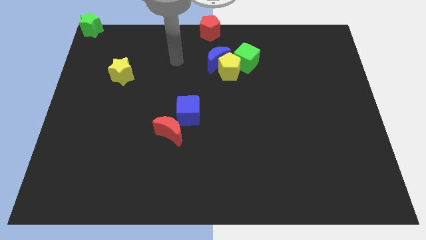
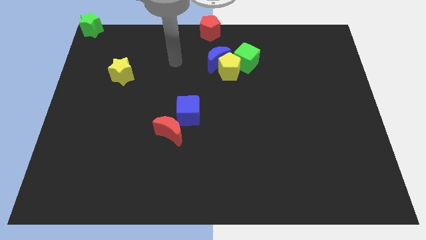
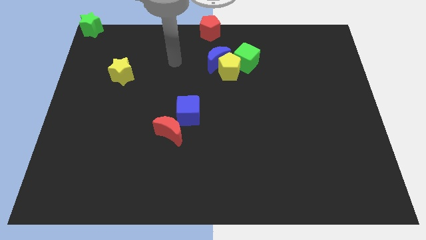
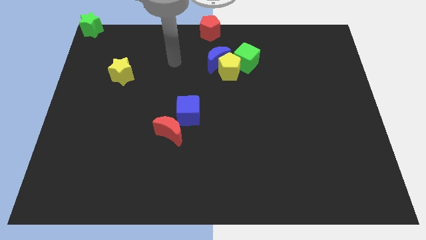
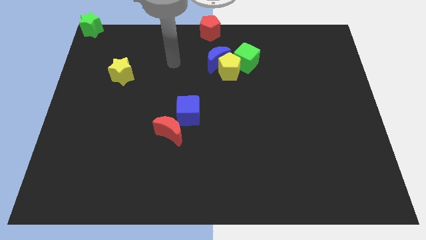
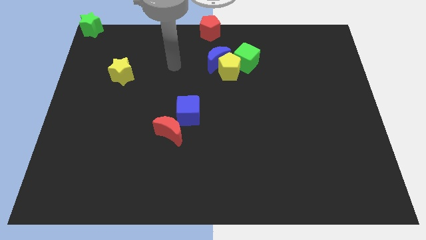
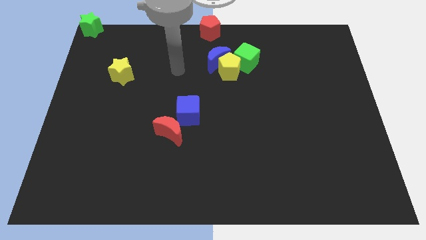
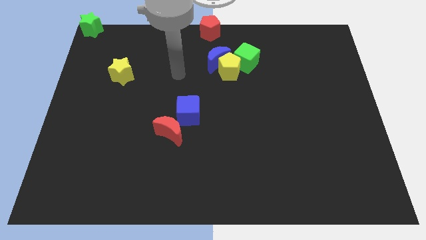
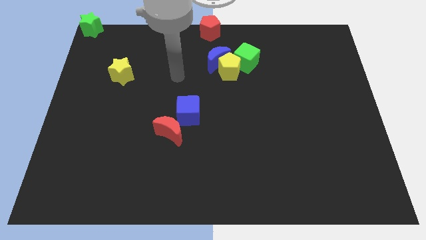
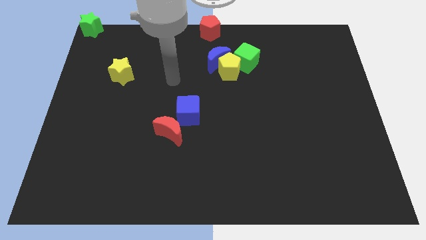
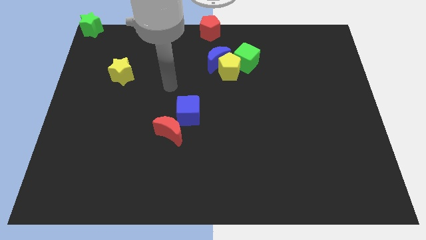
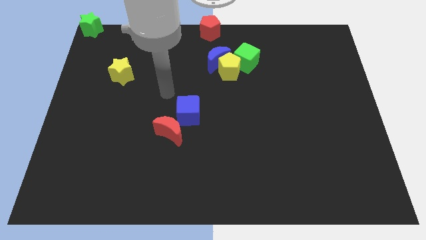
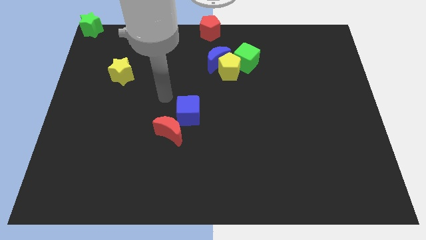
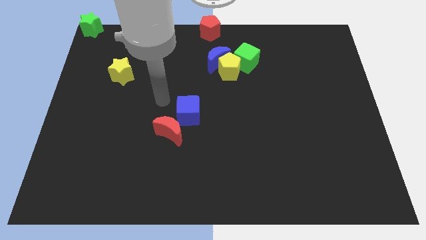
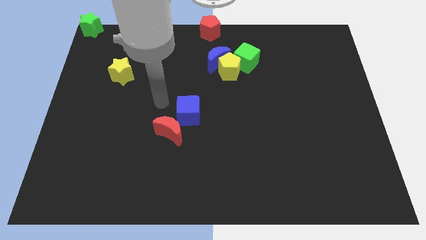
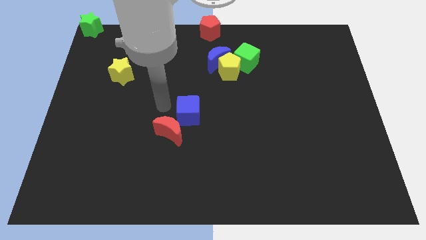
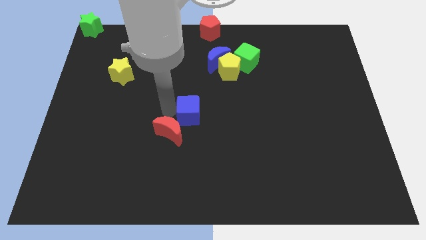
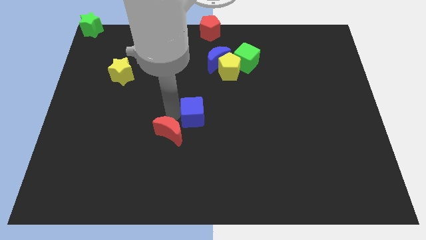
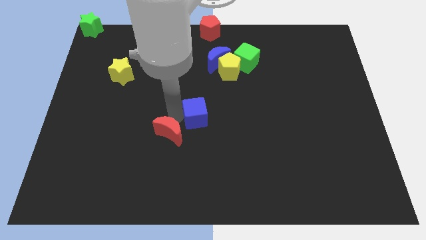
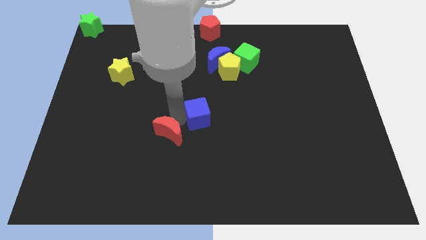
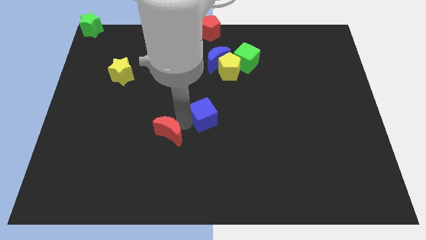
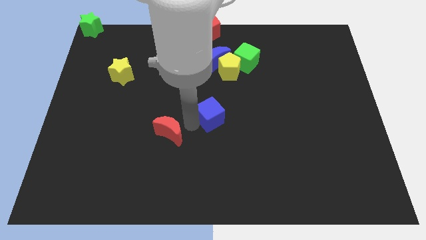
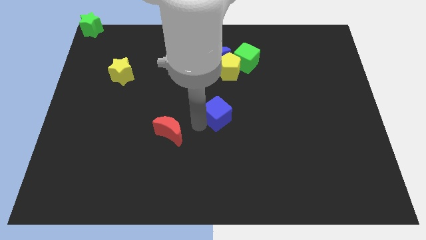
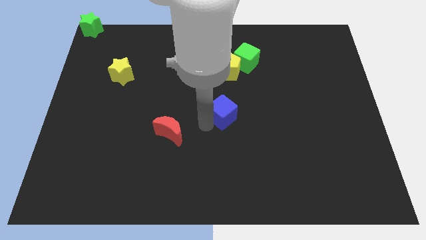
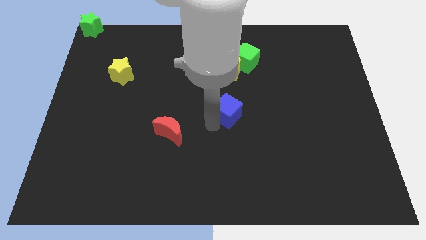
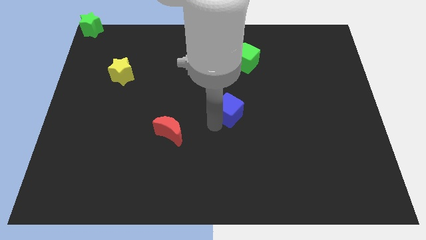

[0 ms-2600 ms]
move the blue cube to the bottom of the yellow pentagon

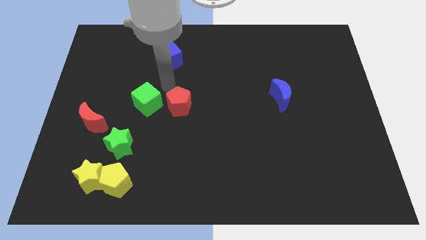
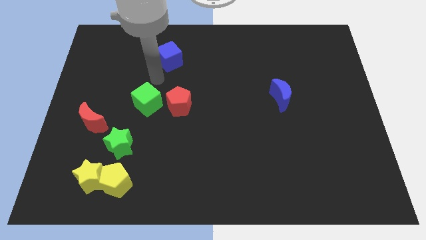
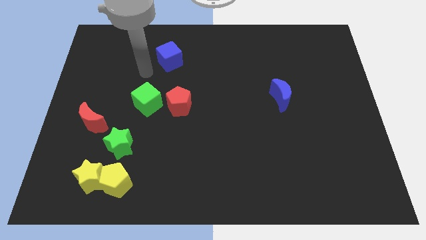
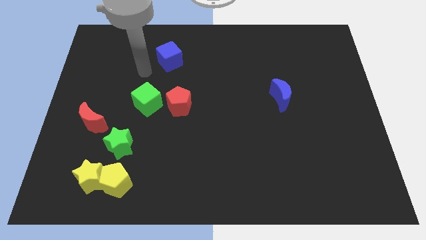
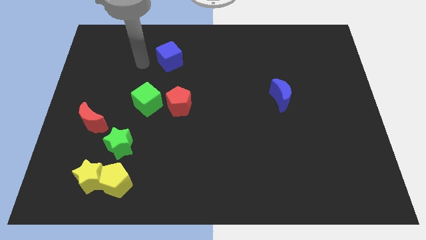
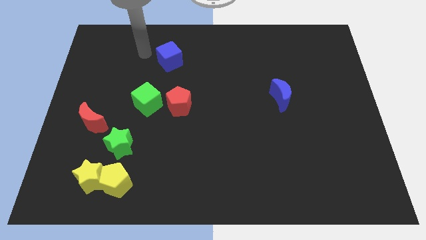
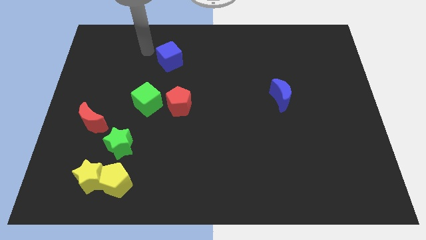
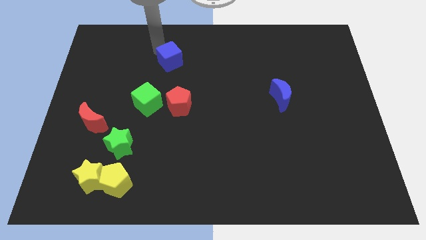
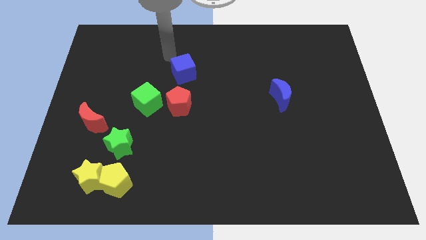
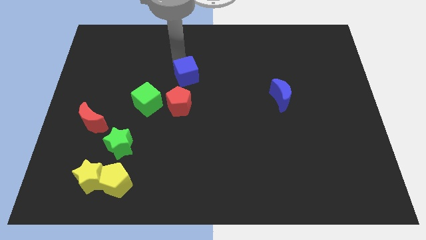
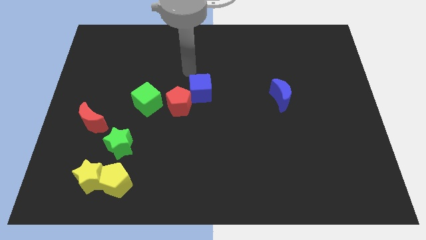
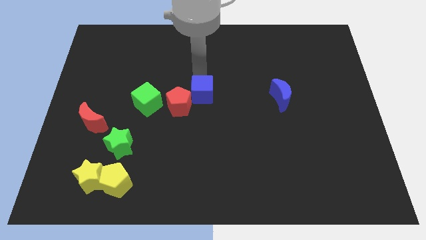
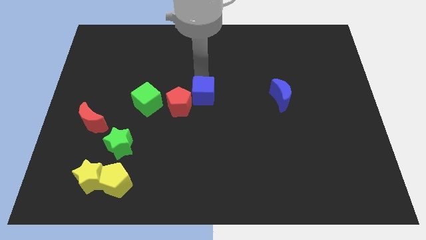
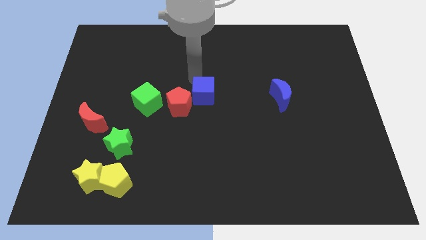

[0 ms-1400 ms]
move the blue cube into the red pentagon

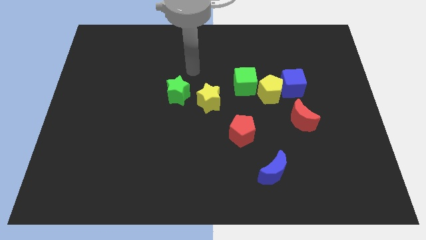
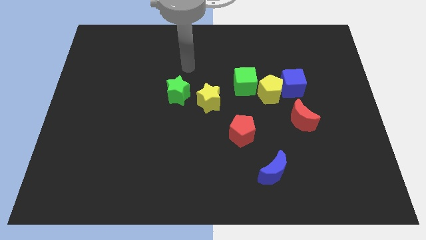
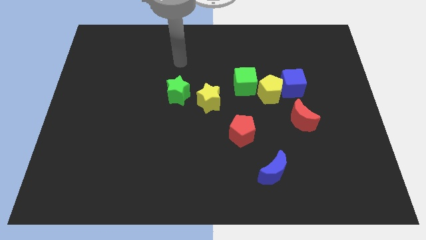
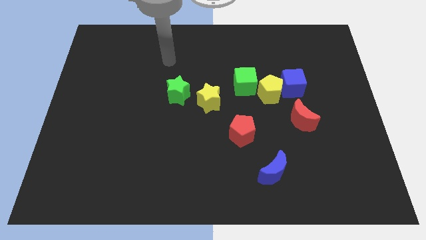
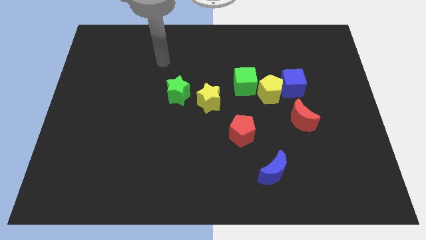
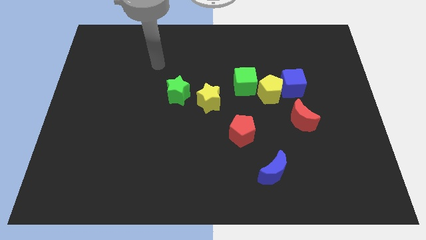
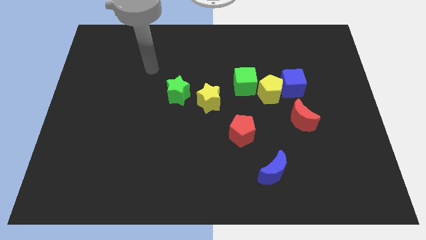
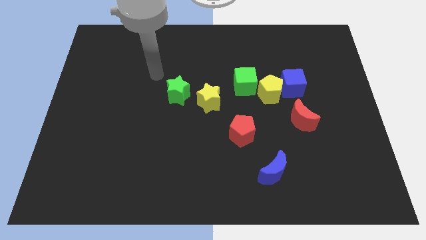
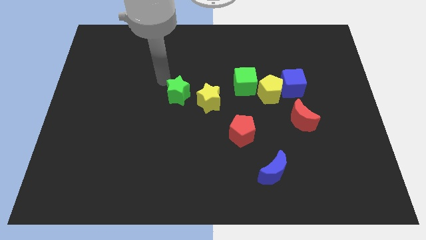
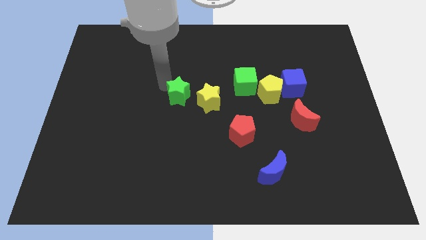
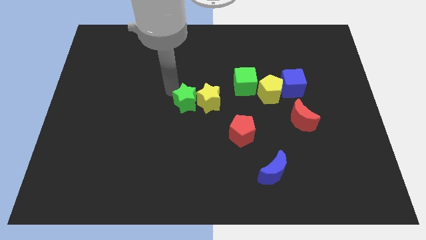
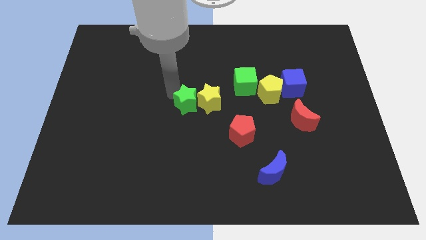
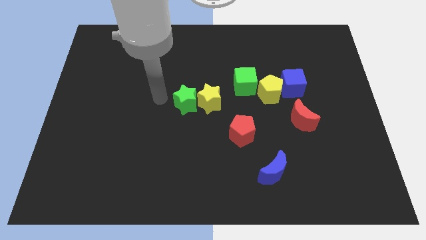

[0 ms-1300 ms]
push the green star left to the yellow star

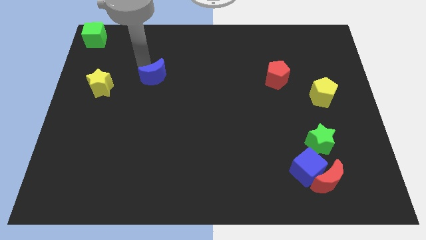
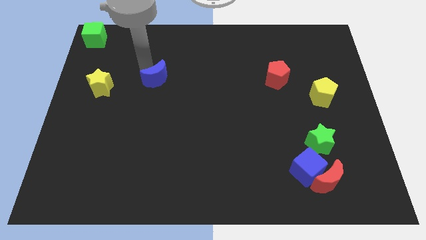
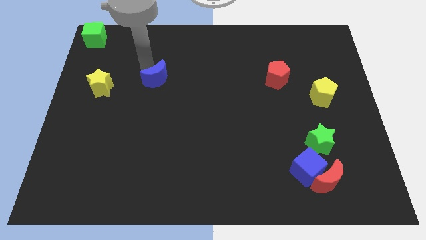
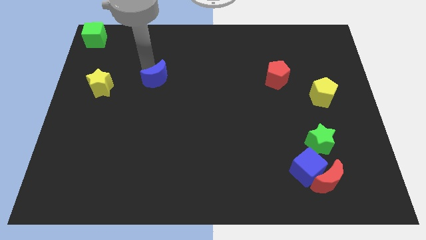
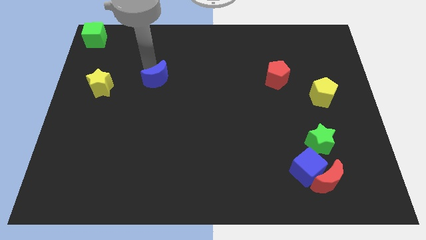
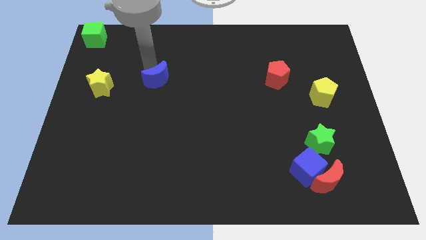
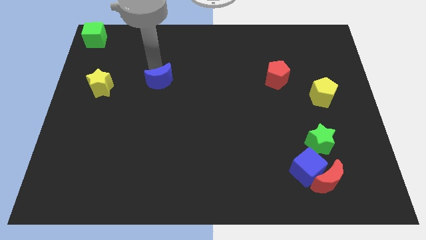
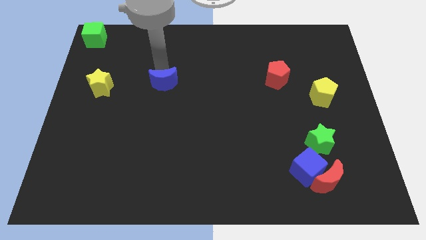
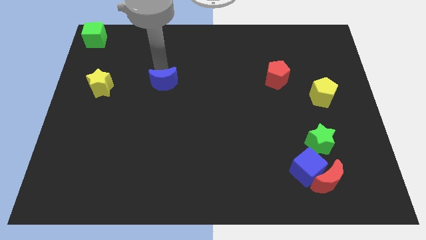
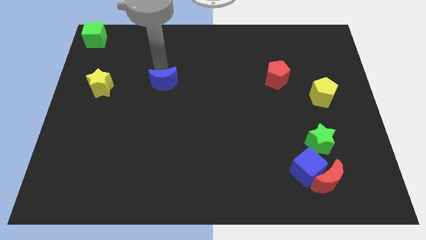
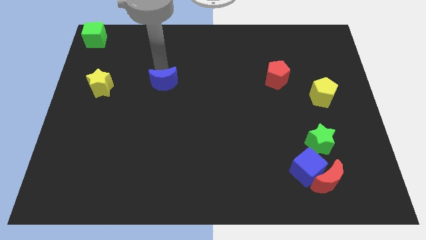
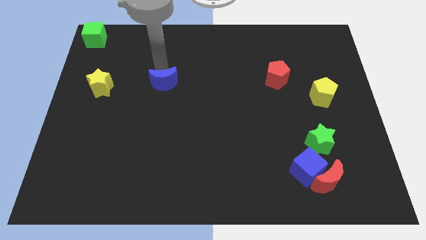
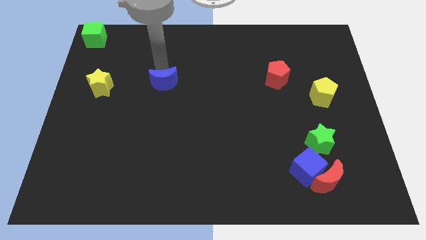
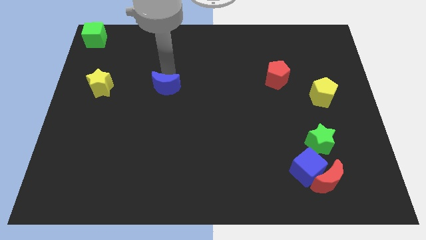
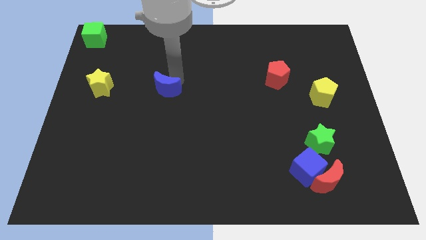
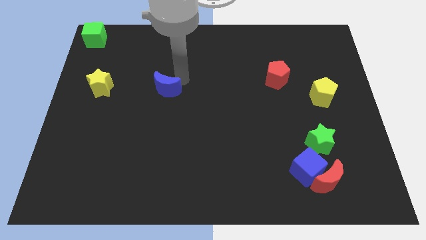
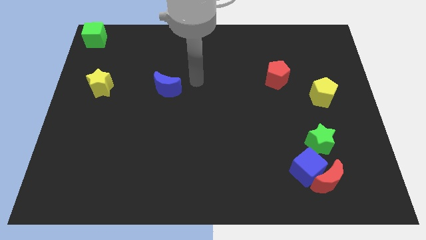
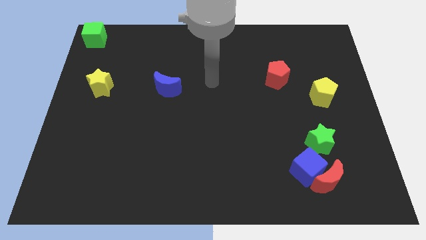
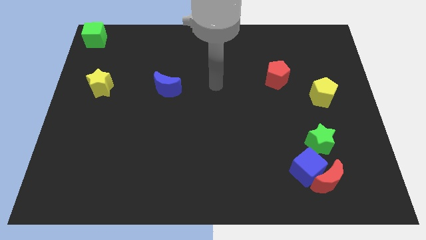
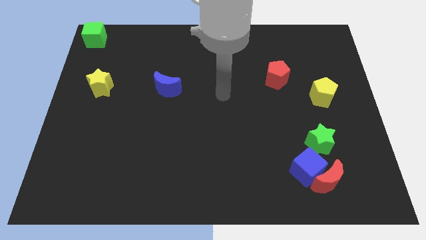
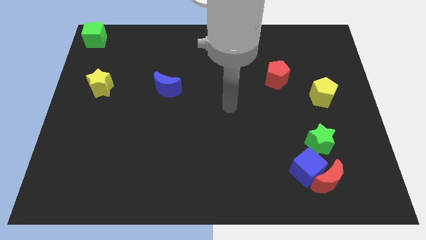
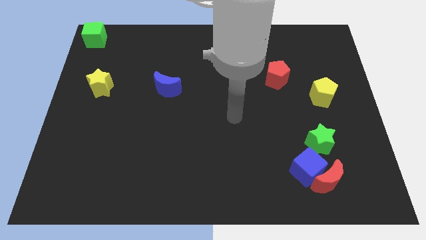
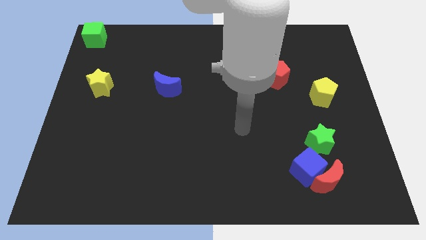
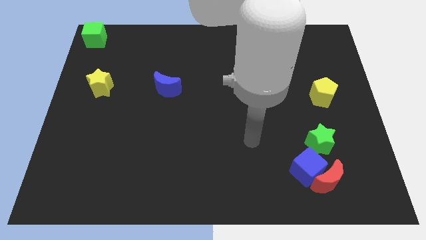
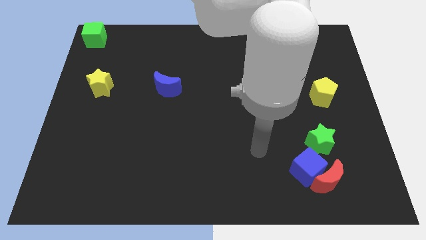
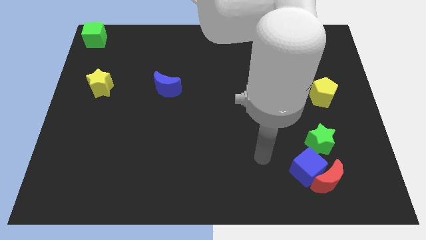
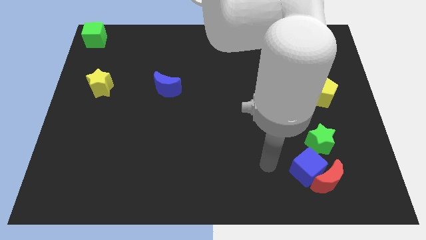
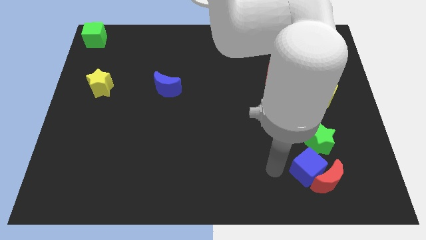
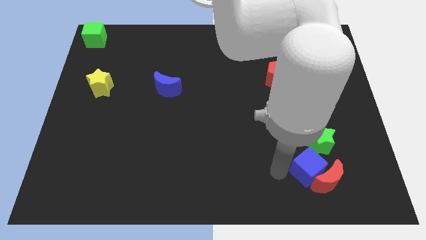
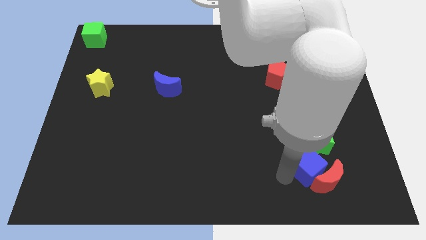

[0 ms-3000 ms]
move the blue moon to the right of the yellow star

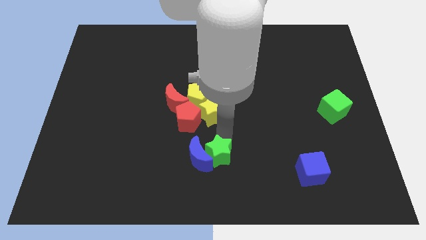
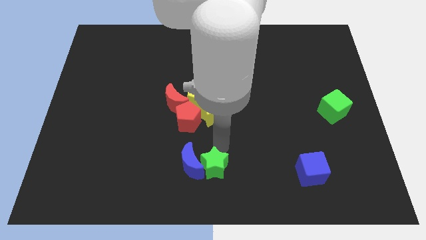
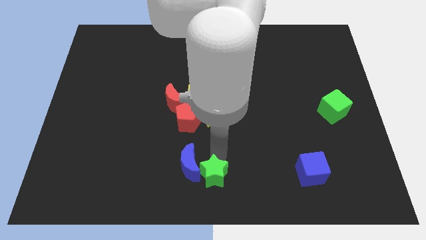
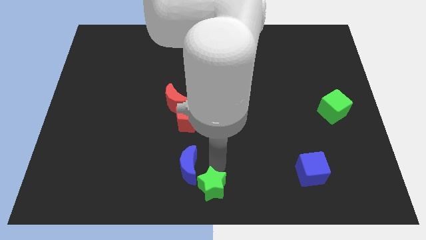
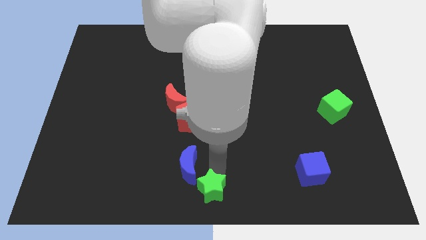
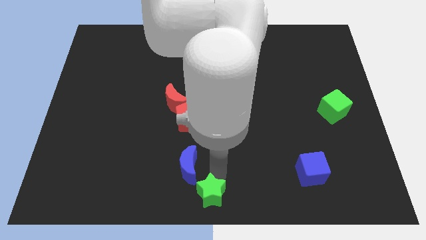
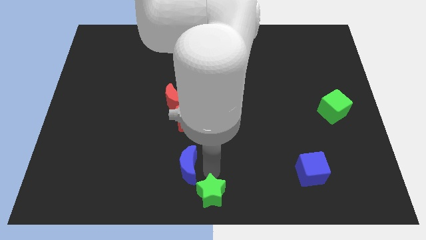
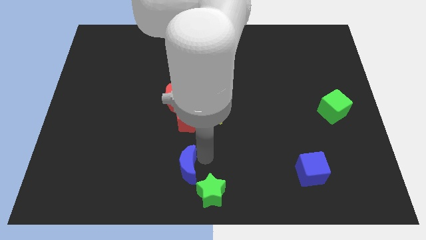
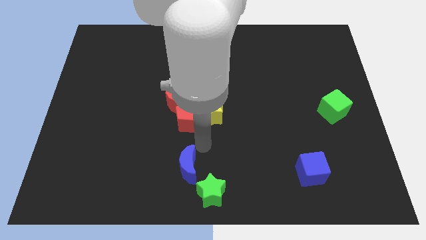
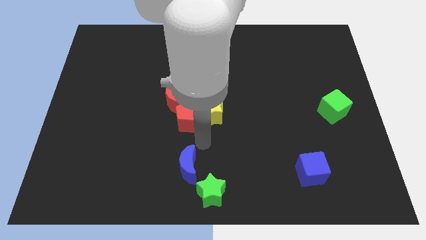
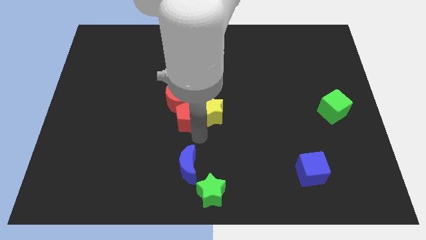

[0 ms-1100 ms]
move the green star to the bottom center of the board
